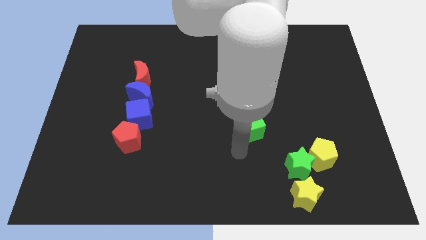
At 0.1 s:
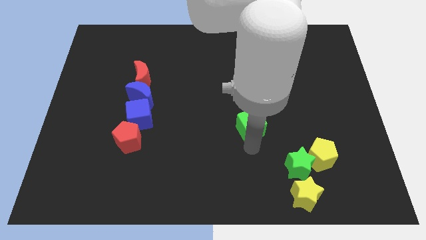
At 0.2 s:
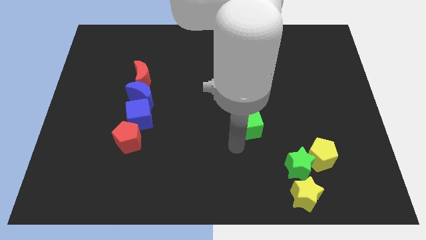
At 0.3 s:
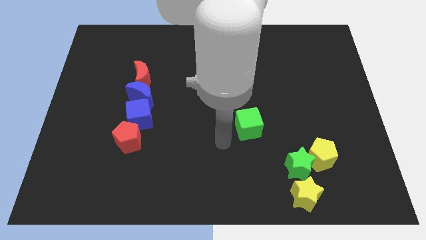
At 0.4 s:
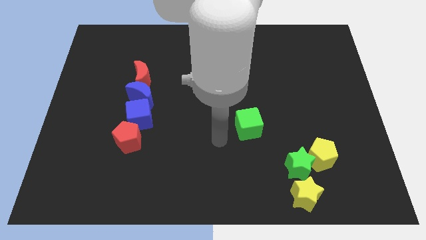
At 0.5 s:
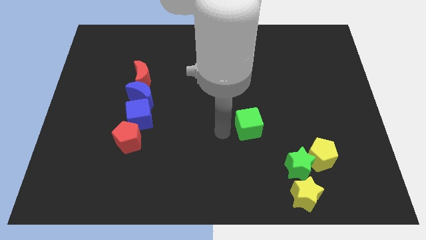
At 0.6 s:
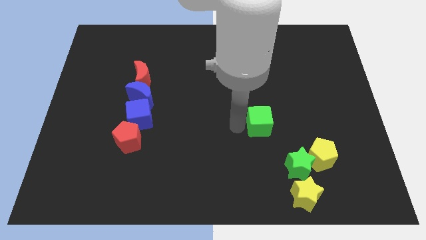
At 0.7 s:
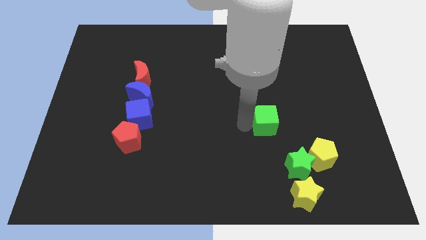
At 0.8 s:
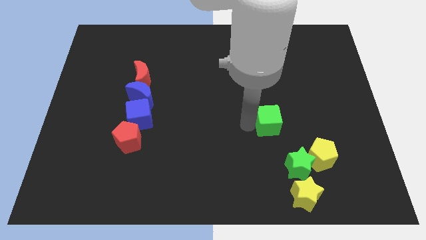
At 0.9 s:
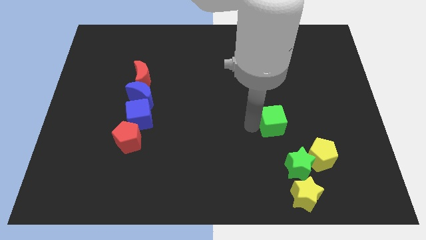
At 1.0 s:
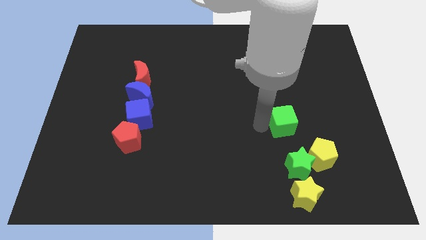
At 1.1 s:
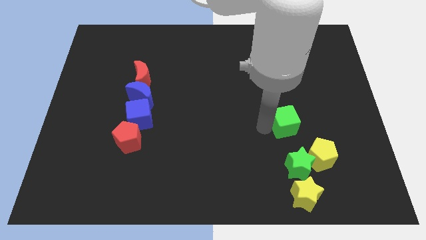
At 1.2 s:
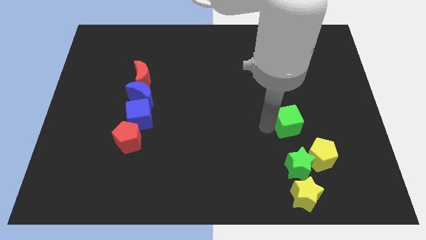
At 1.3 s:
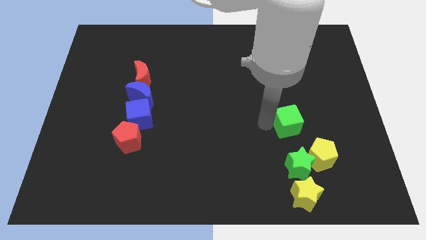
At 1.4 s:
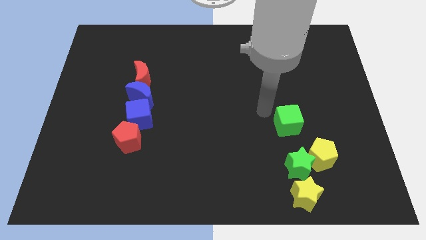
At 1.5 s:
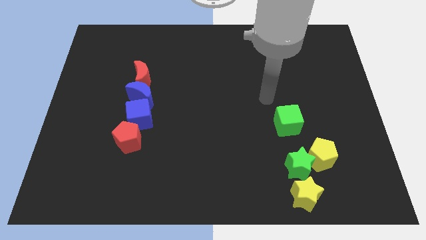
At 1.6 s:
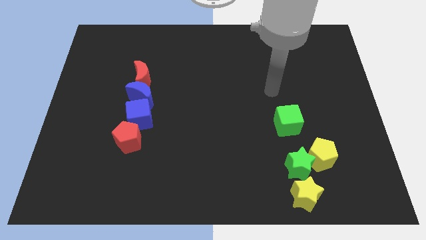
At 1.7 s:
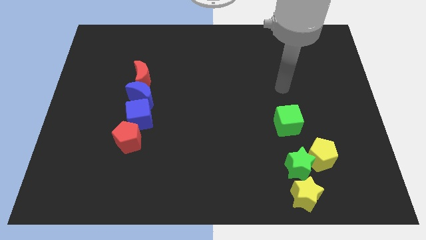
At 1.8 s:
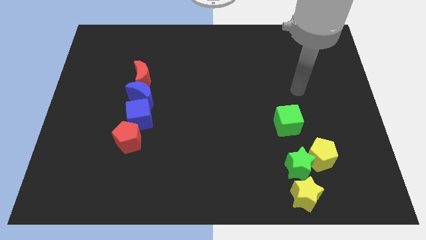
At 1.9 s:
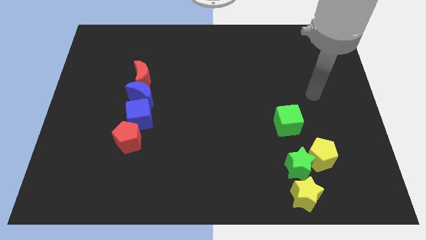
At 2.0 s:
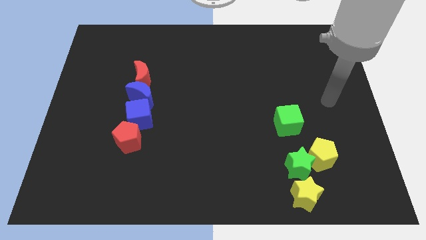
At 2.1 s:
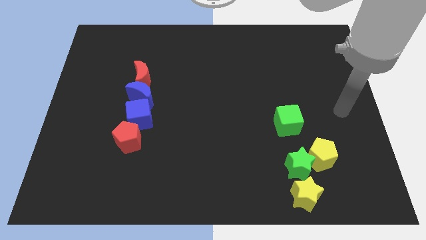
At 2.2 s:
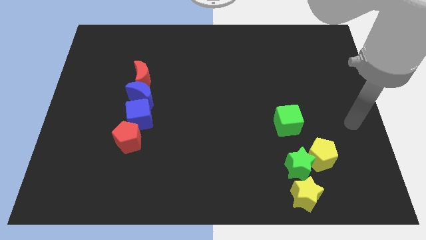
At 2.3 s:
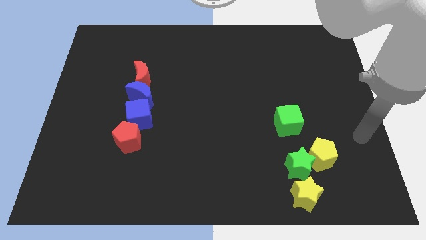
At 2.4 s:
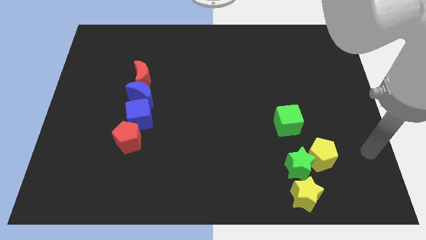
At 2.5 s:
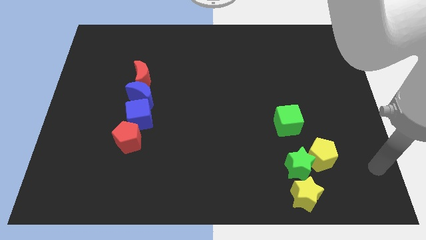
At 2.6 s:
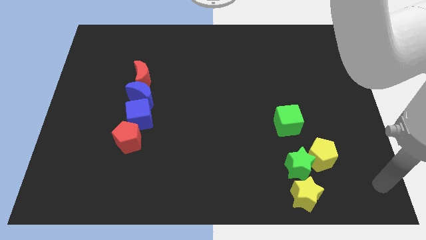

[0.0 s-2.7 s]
push the green cube to the left bottom of the board

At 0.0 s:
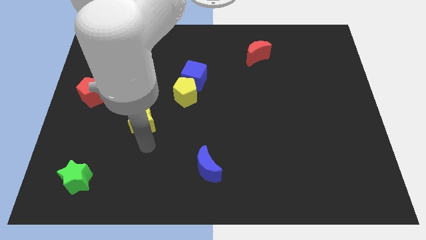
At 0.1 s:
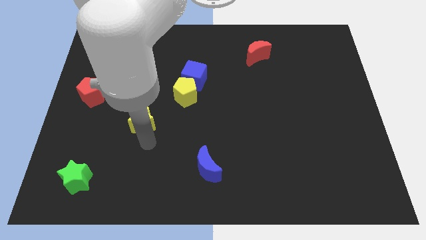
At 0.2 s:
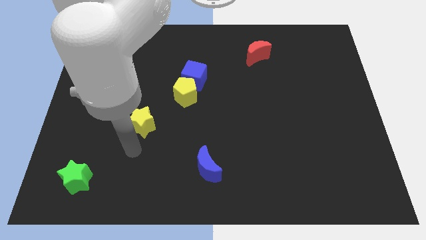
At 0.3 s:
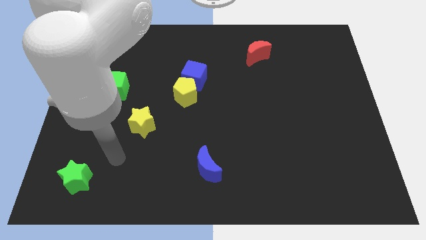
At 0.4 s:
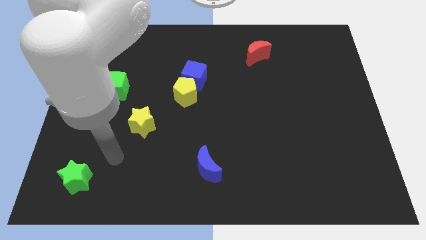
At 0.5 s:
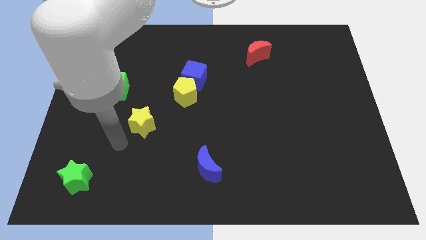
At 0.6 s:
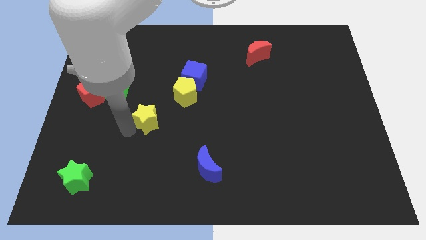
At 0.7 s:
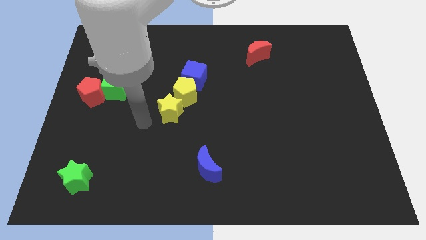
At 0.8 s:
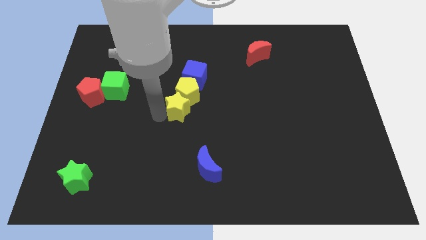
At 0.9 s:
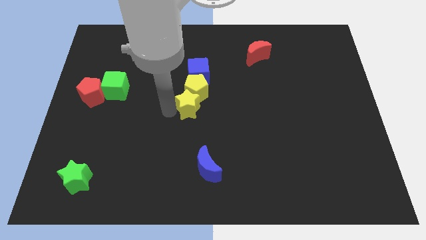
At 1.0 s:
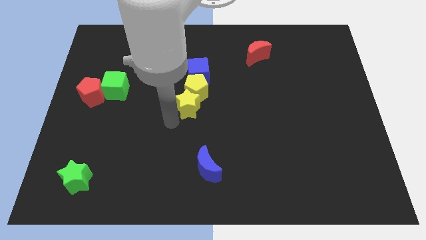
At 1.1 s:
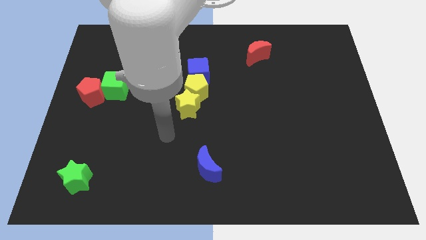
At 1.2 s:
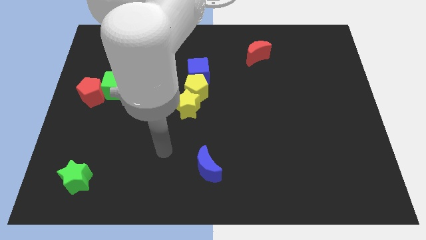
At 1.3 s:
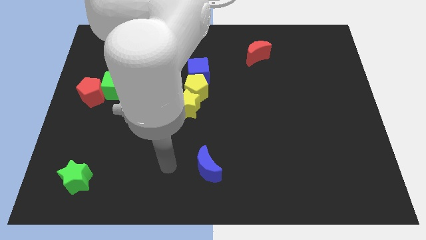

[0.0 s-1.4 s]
move the yellow star into the yellow pentagon

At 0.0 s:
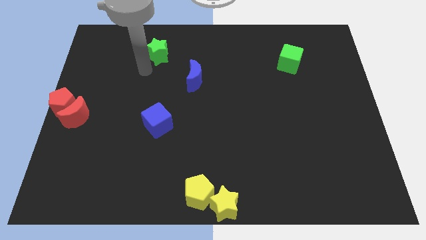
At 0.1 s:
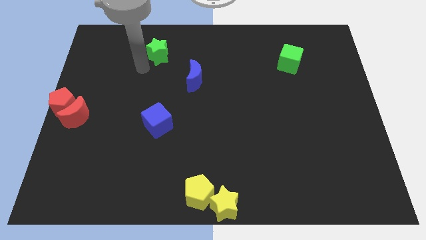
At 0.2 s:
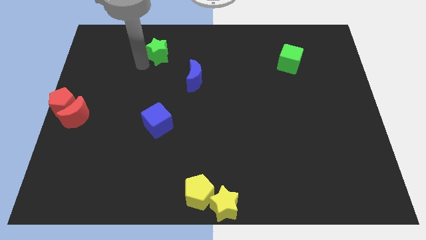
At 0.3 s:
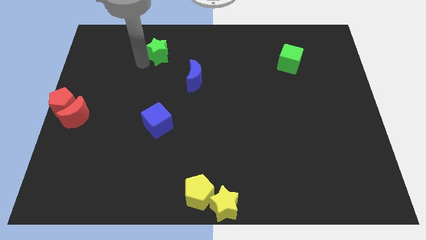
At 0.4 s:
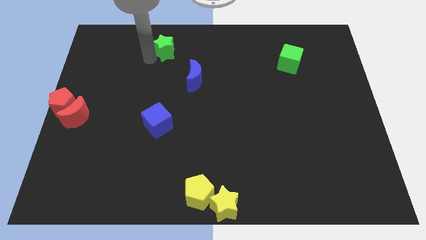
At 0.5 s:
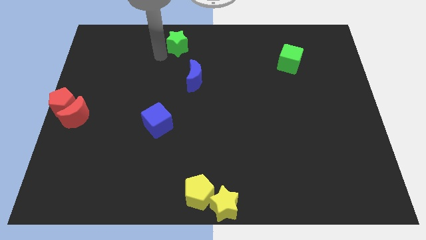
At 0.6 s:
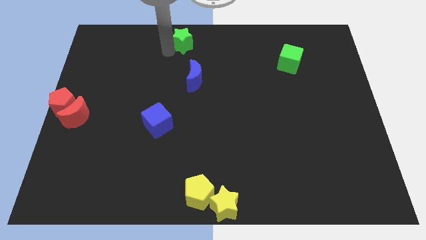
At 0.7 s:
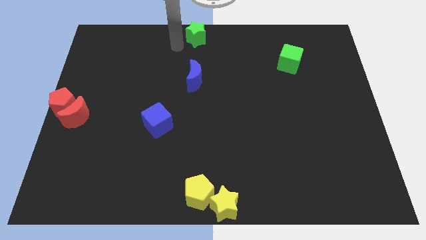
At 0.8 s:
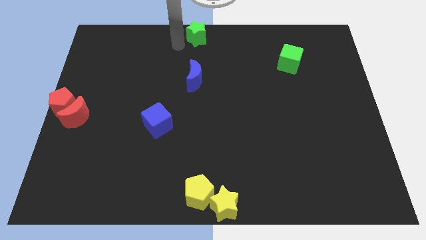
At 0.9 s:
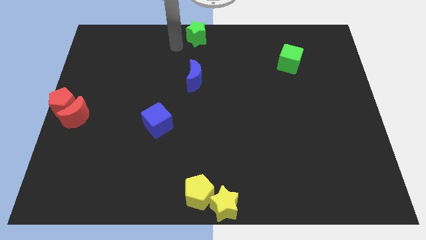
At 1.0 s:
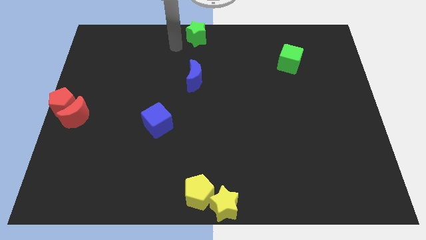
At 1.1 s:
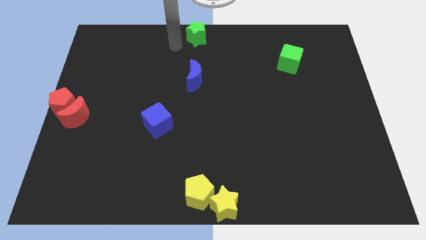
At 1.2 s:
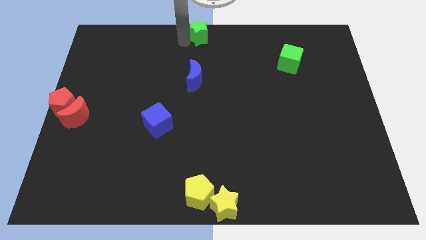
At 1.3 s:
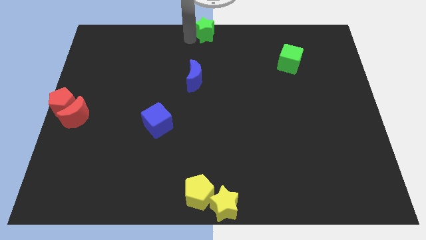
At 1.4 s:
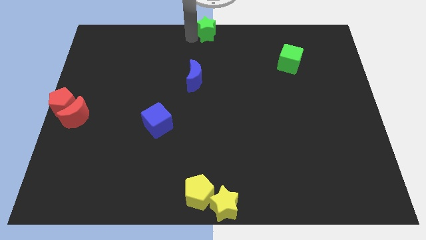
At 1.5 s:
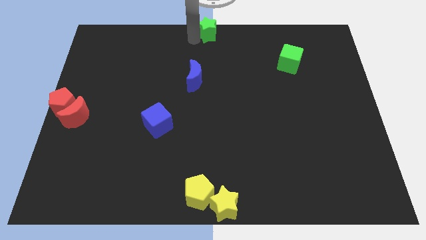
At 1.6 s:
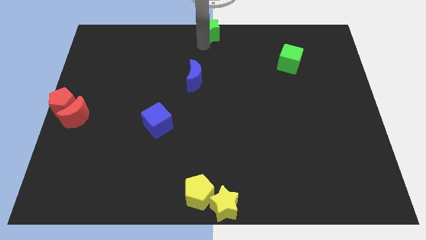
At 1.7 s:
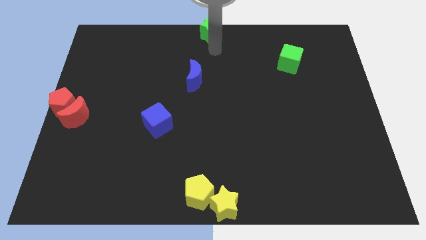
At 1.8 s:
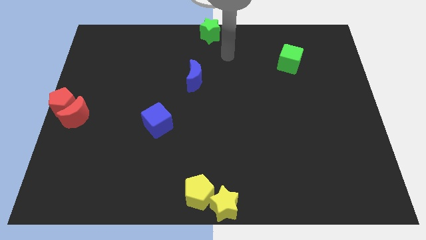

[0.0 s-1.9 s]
push the green star to the top centre of the board

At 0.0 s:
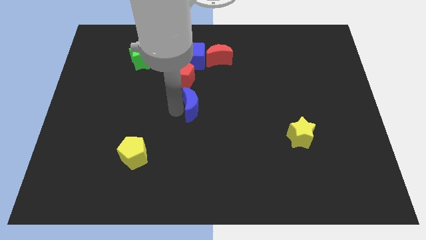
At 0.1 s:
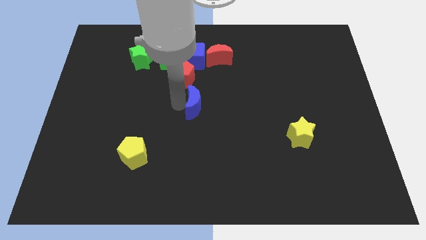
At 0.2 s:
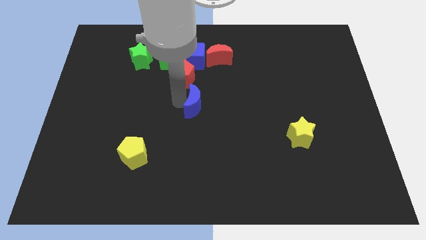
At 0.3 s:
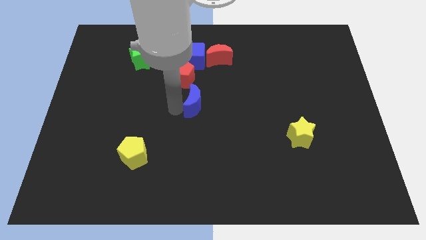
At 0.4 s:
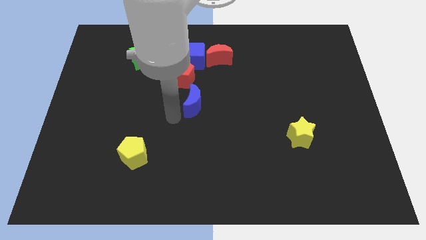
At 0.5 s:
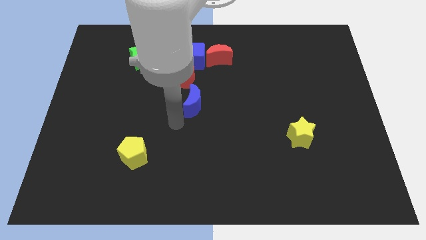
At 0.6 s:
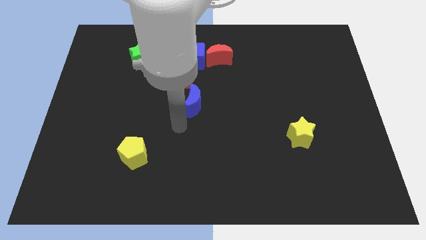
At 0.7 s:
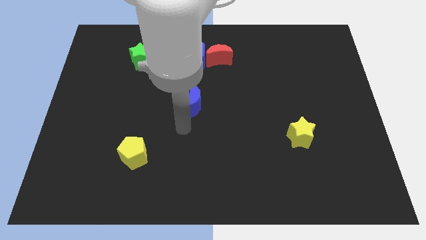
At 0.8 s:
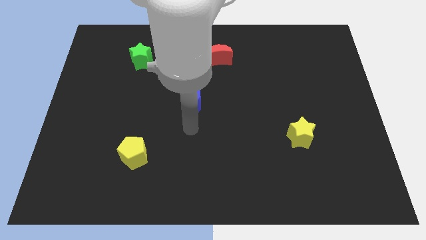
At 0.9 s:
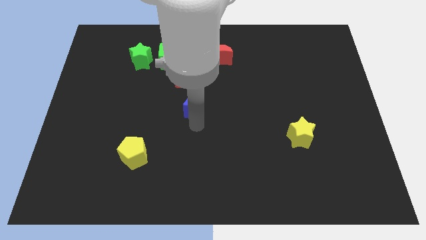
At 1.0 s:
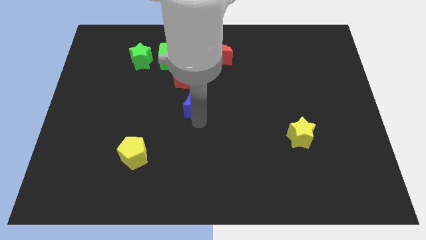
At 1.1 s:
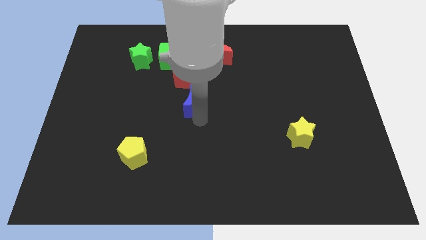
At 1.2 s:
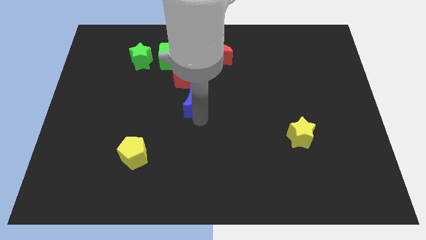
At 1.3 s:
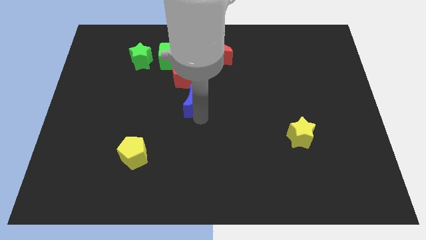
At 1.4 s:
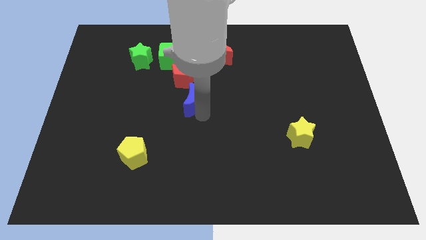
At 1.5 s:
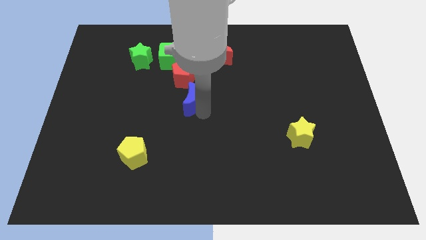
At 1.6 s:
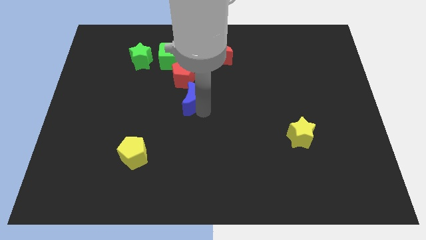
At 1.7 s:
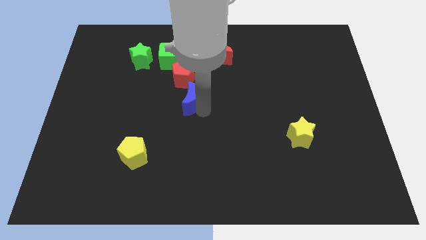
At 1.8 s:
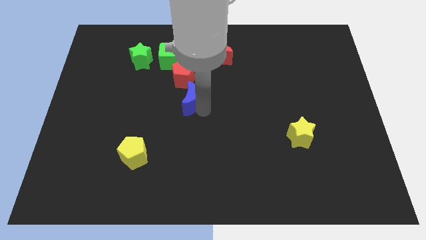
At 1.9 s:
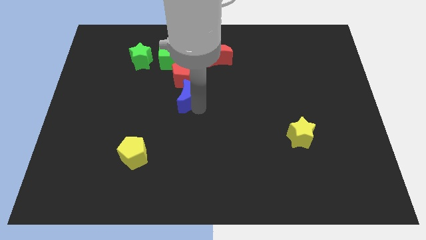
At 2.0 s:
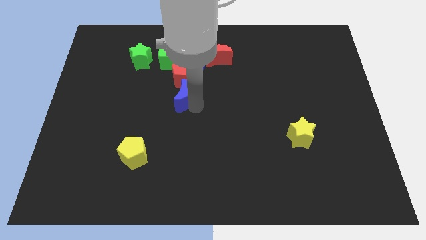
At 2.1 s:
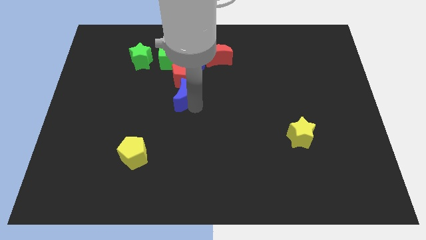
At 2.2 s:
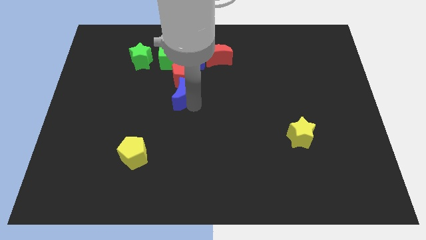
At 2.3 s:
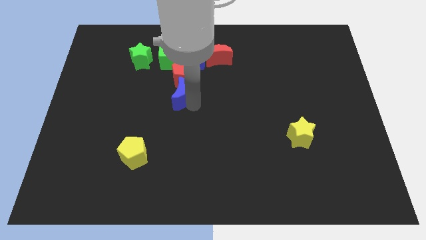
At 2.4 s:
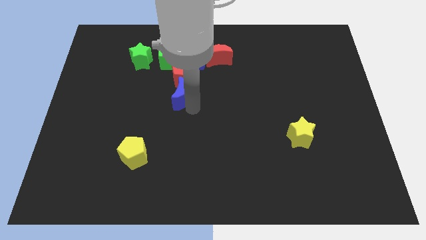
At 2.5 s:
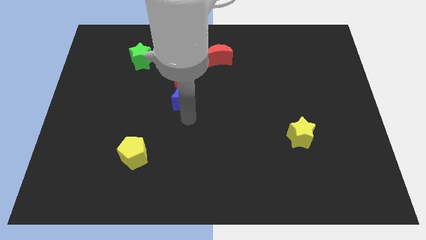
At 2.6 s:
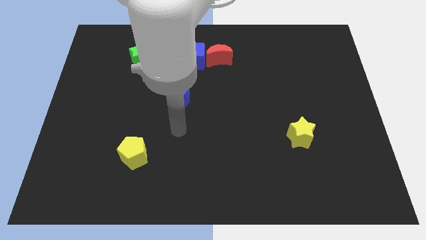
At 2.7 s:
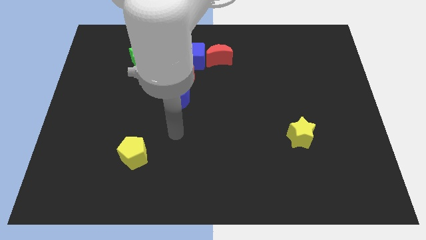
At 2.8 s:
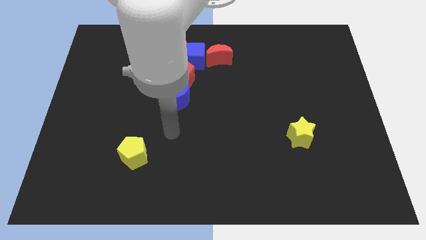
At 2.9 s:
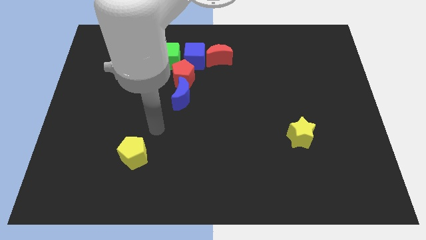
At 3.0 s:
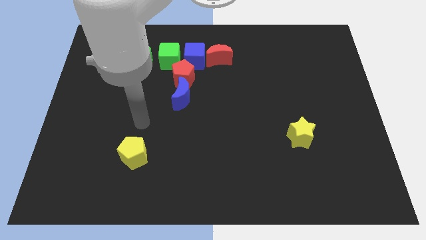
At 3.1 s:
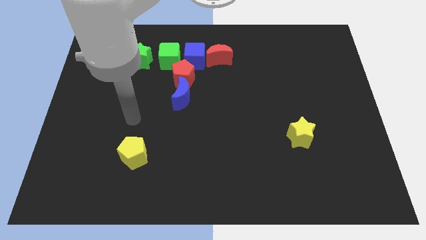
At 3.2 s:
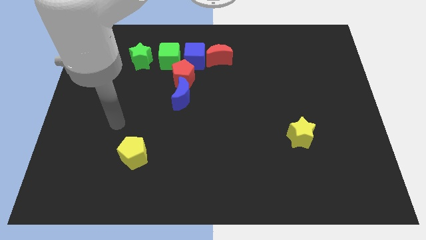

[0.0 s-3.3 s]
move the blue crescent at the bottom of the red pentagon
